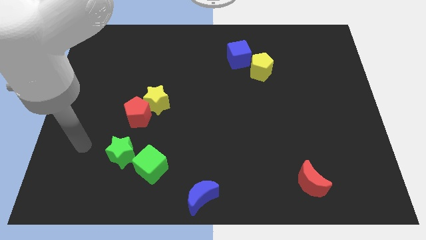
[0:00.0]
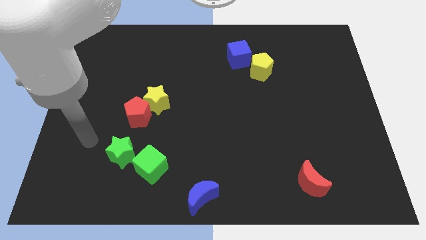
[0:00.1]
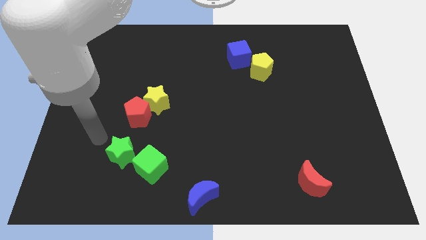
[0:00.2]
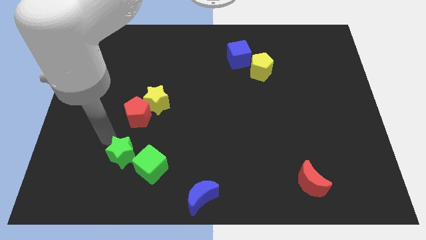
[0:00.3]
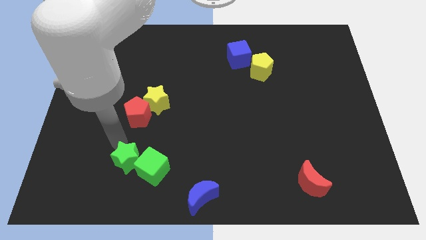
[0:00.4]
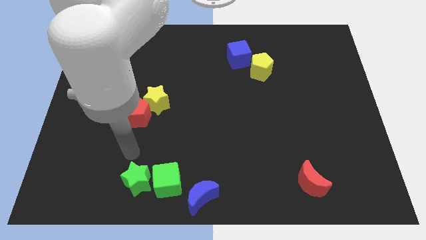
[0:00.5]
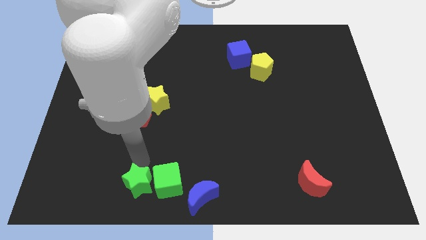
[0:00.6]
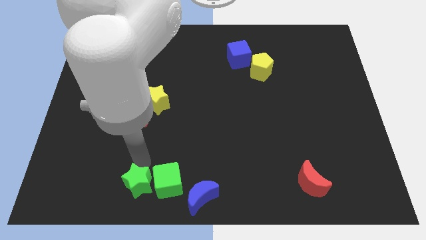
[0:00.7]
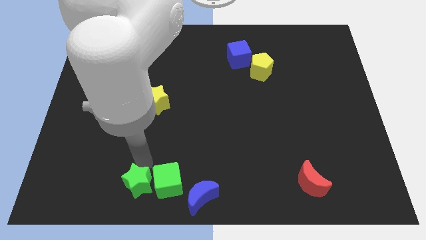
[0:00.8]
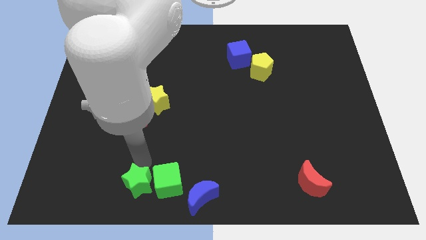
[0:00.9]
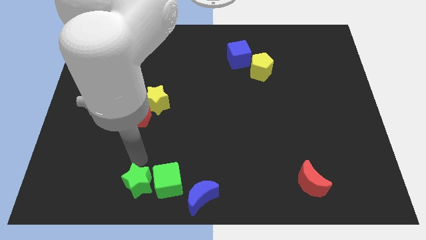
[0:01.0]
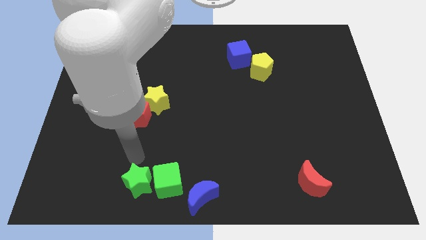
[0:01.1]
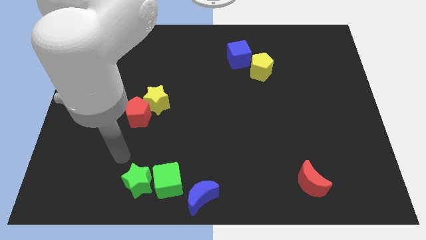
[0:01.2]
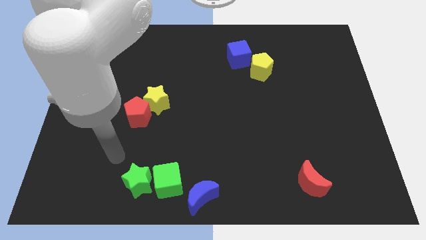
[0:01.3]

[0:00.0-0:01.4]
push two green blocks downwards

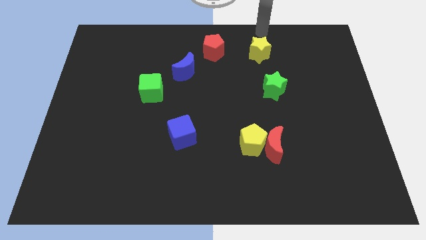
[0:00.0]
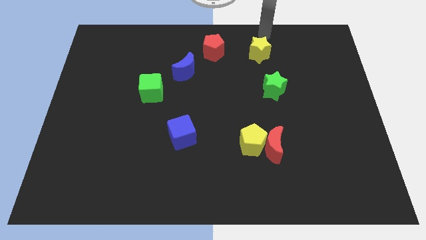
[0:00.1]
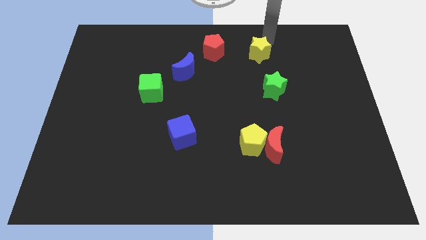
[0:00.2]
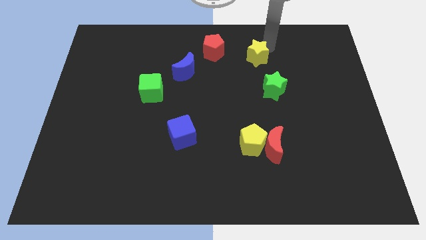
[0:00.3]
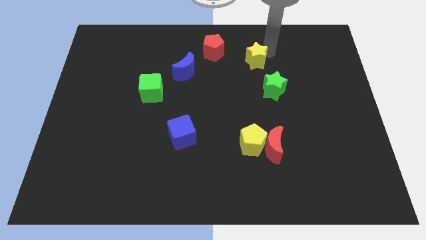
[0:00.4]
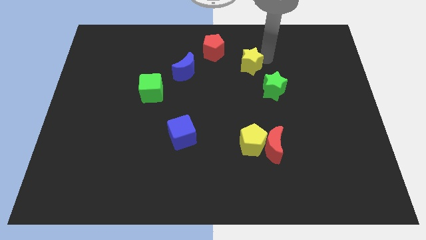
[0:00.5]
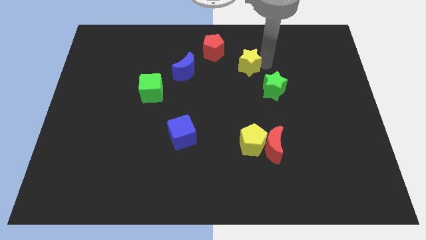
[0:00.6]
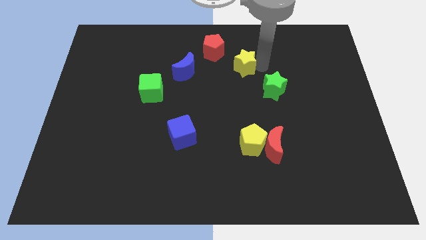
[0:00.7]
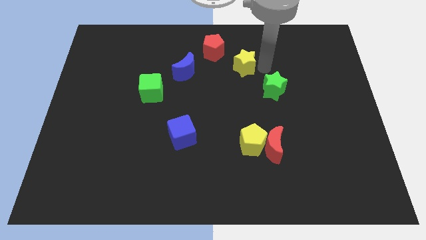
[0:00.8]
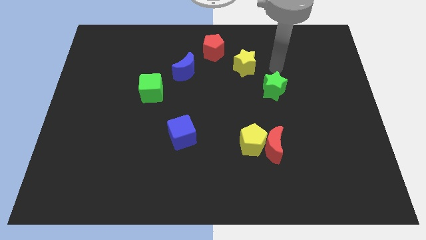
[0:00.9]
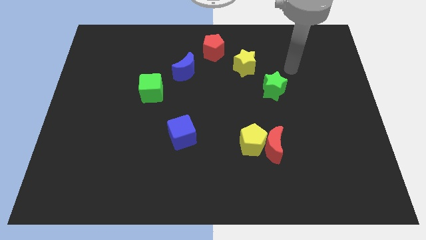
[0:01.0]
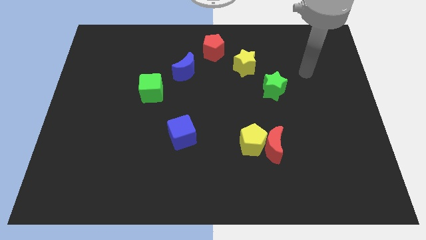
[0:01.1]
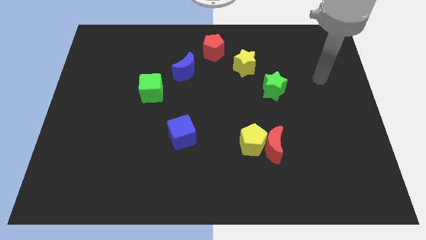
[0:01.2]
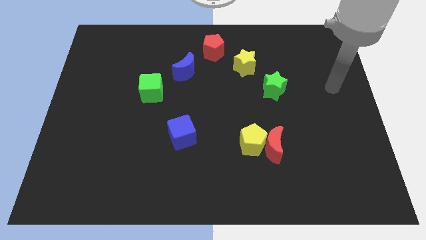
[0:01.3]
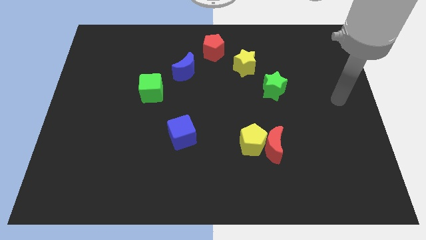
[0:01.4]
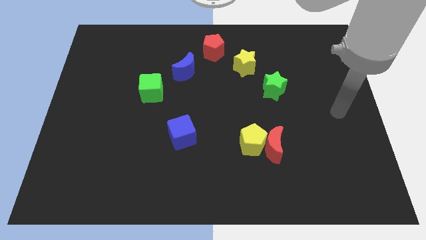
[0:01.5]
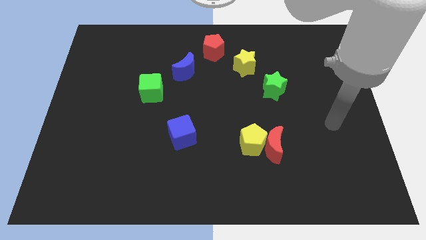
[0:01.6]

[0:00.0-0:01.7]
place the yellow star in between the green star and the red pentagon to form a diagonal line

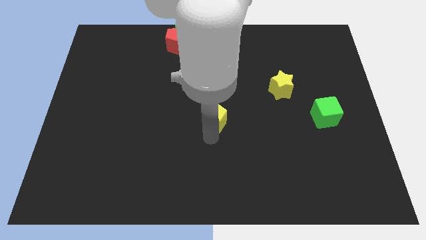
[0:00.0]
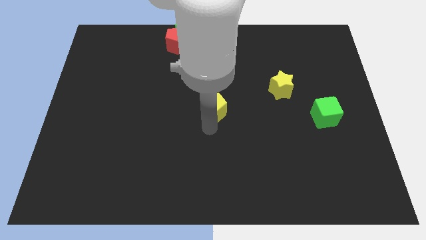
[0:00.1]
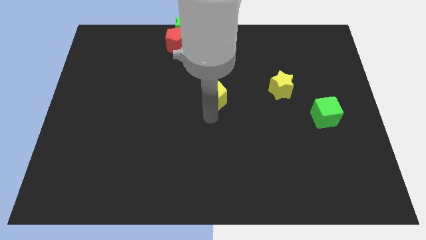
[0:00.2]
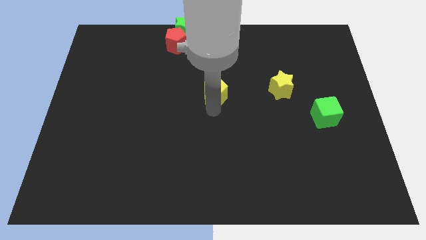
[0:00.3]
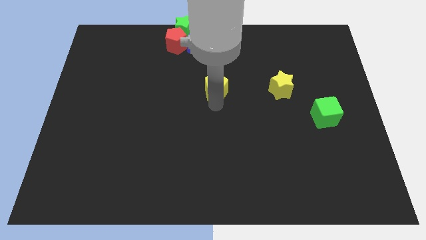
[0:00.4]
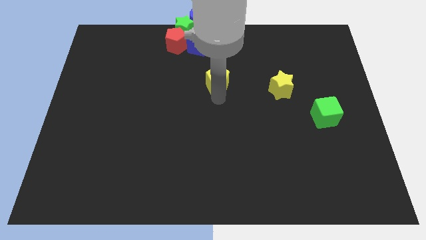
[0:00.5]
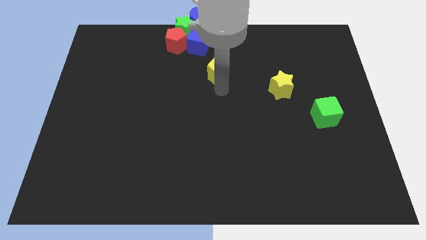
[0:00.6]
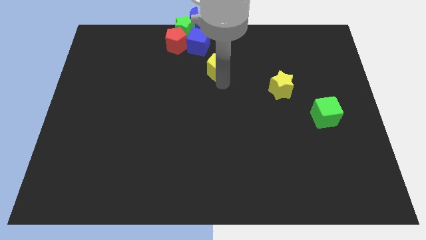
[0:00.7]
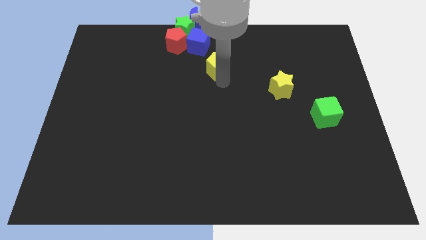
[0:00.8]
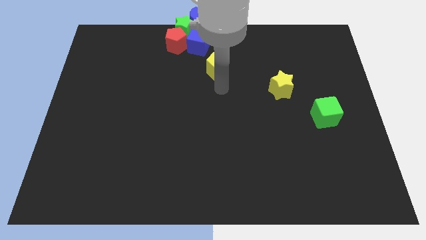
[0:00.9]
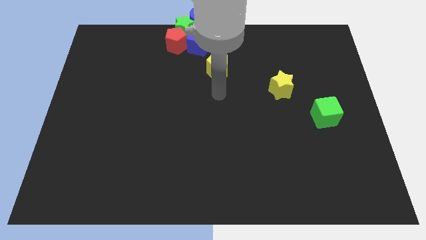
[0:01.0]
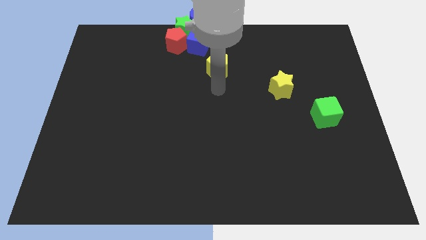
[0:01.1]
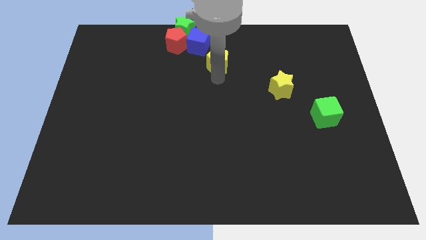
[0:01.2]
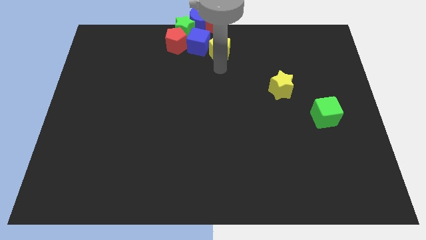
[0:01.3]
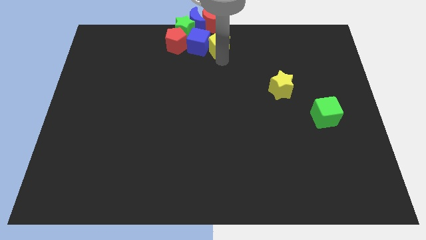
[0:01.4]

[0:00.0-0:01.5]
place a yellow pentagon right to the blue cube

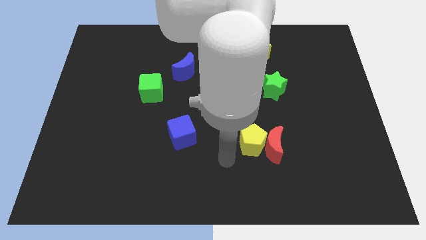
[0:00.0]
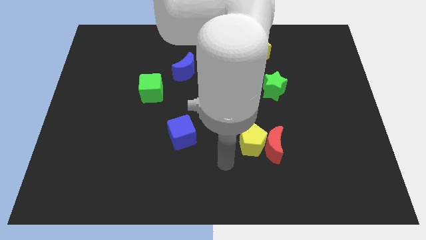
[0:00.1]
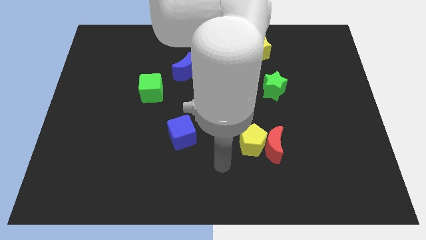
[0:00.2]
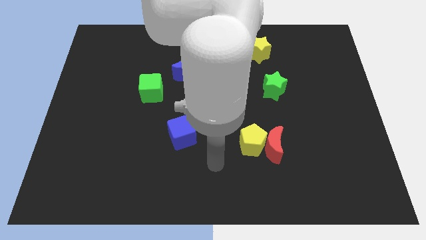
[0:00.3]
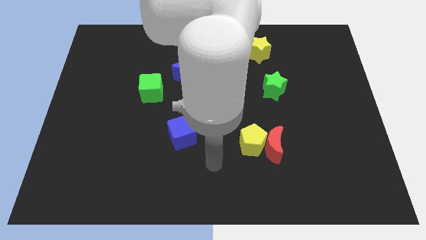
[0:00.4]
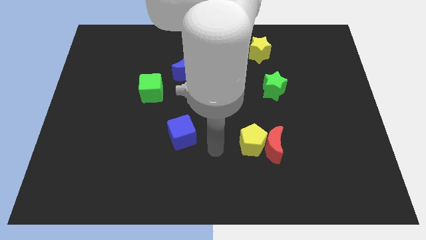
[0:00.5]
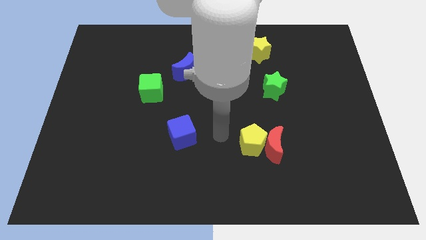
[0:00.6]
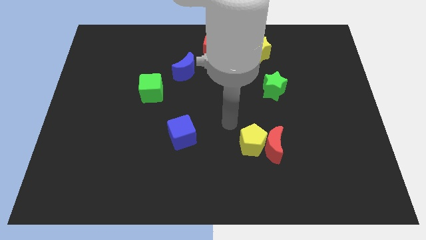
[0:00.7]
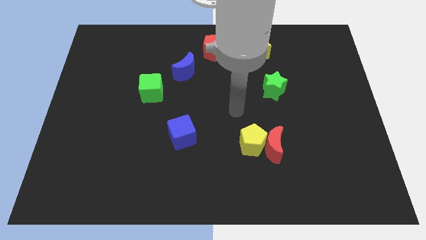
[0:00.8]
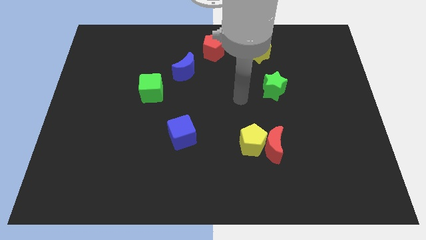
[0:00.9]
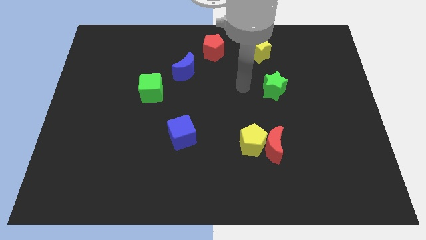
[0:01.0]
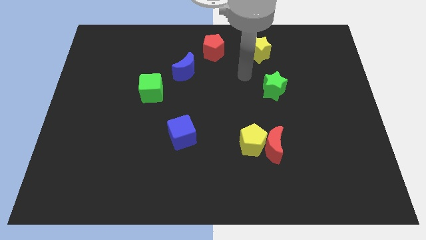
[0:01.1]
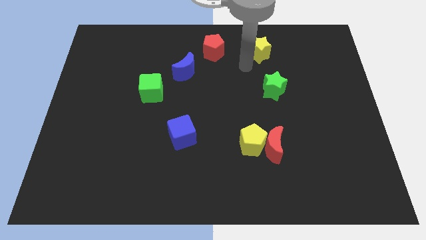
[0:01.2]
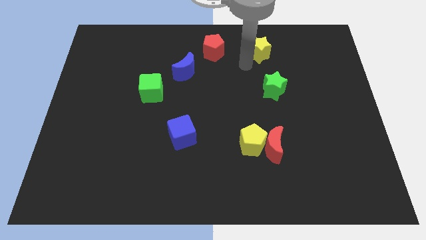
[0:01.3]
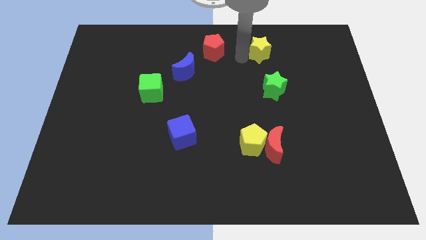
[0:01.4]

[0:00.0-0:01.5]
move the arm away from the yellow pentagon on the board

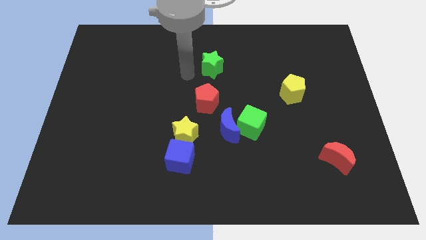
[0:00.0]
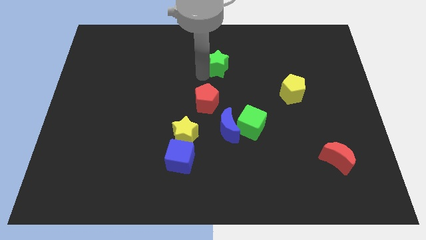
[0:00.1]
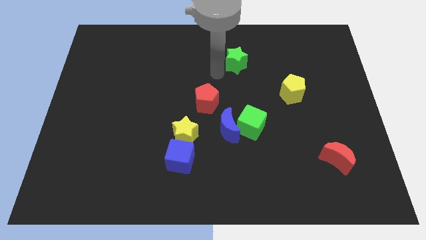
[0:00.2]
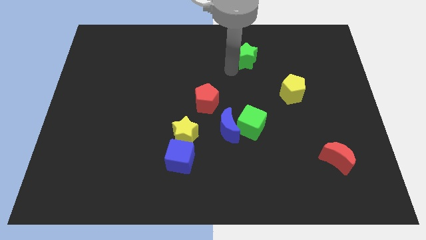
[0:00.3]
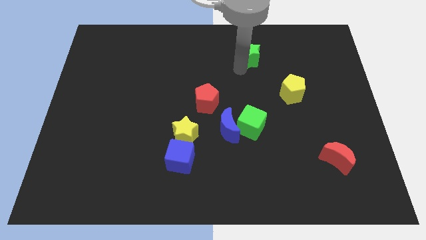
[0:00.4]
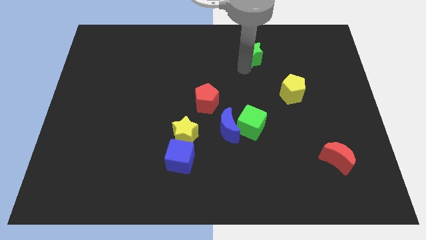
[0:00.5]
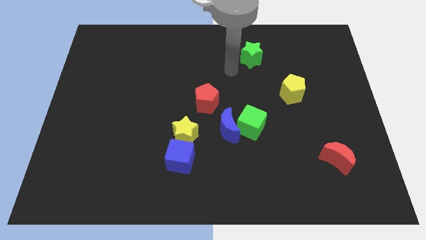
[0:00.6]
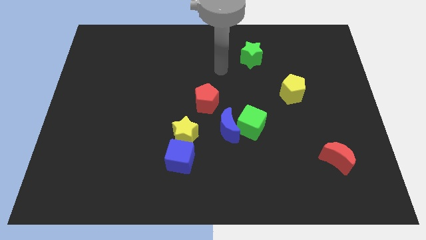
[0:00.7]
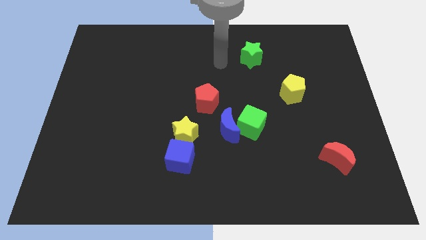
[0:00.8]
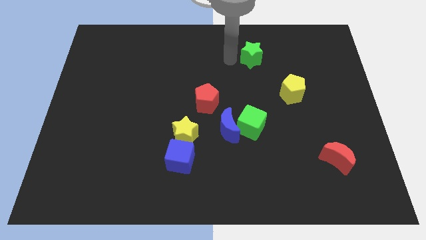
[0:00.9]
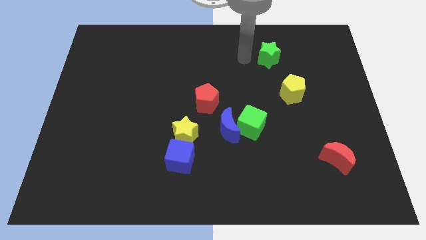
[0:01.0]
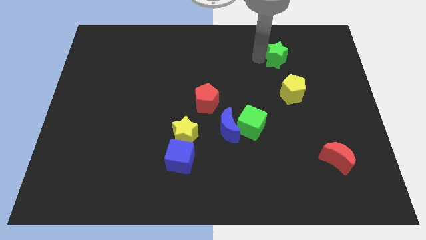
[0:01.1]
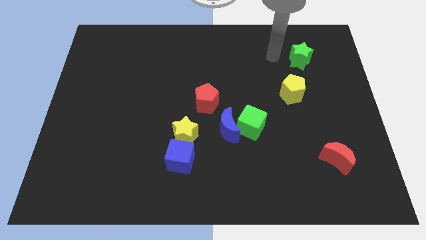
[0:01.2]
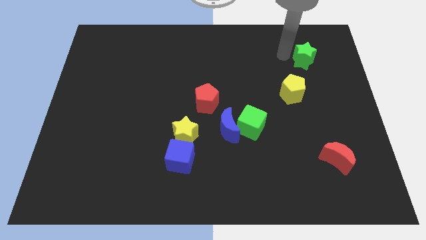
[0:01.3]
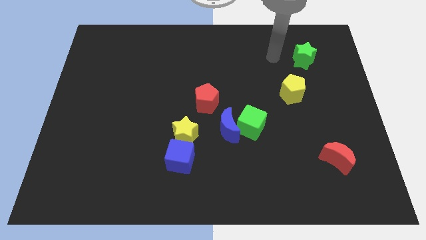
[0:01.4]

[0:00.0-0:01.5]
place the green star diagonally above the yellow pentagon

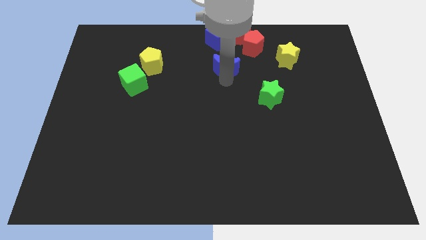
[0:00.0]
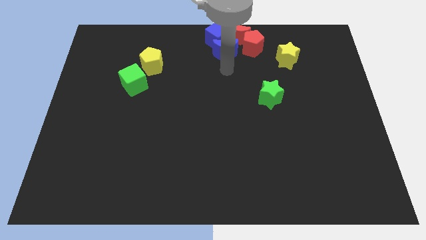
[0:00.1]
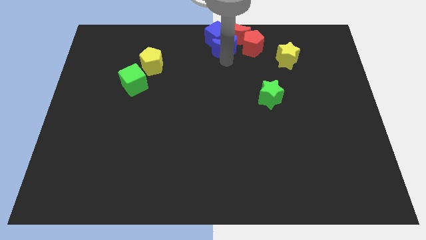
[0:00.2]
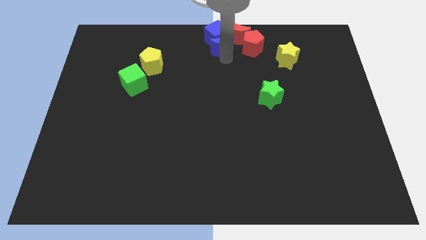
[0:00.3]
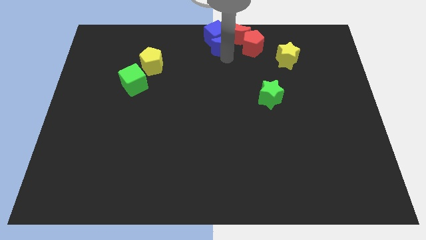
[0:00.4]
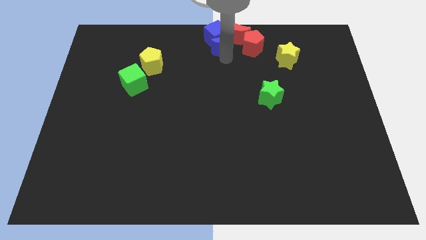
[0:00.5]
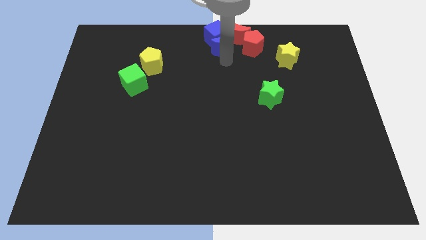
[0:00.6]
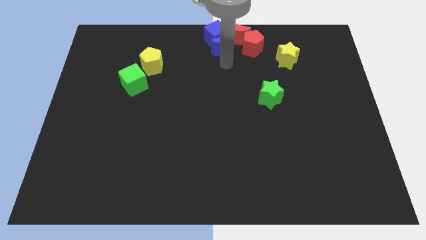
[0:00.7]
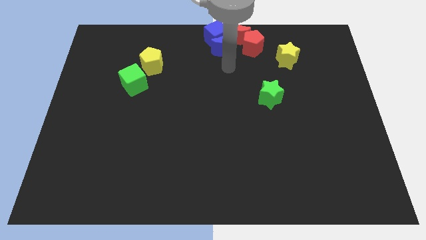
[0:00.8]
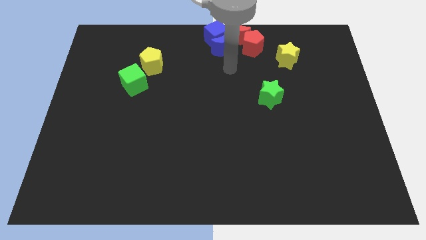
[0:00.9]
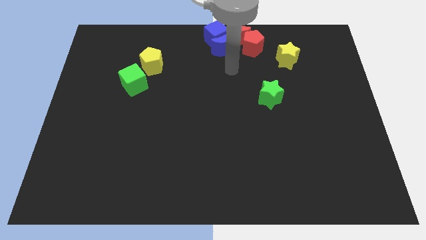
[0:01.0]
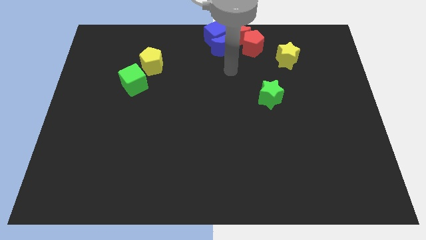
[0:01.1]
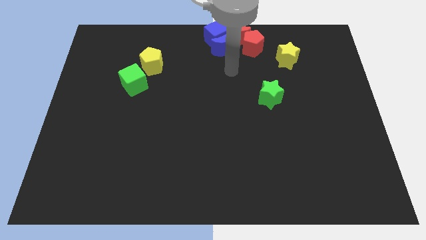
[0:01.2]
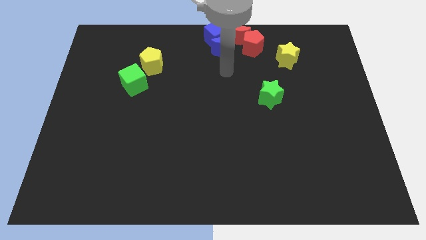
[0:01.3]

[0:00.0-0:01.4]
place the blue crescent close to the blue cube
